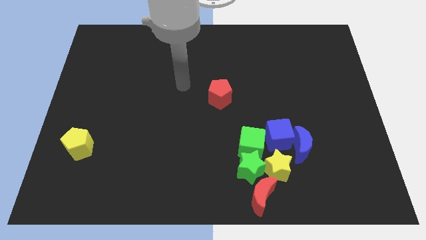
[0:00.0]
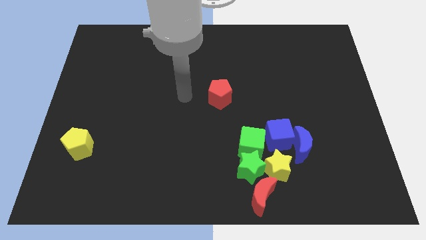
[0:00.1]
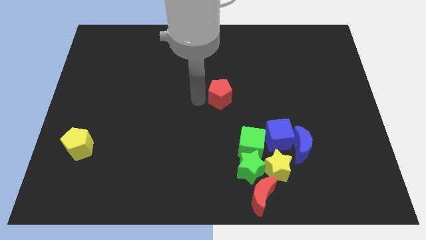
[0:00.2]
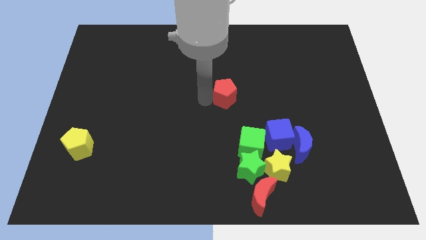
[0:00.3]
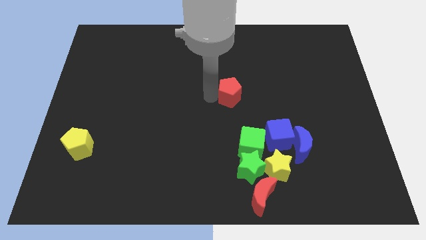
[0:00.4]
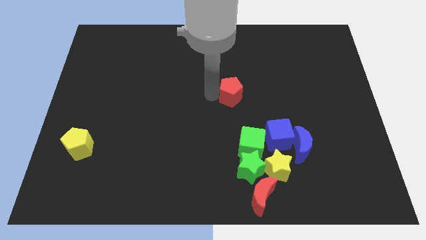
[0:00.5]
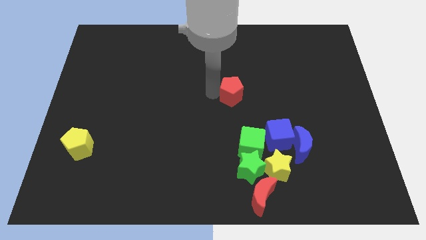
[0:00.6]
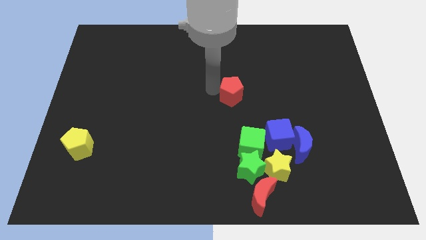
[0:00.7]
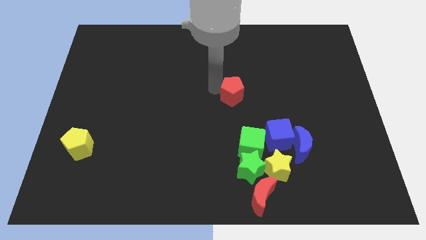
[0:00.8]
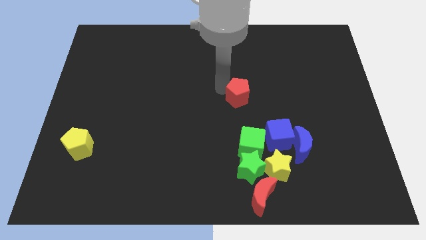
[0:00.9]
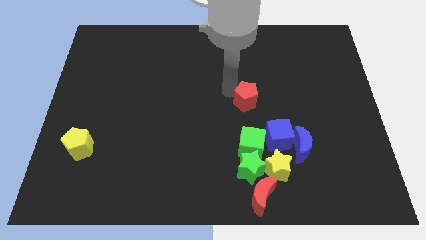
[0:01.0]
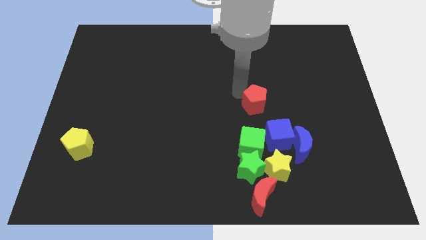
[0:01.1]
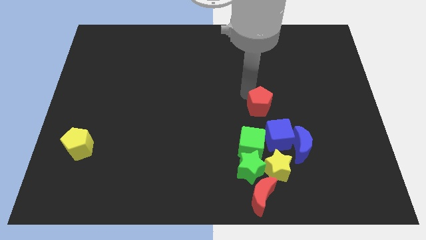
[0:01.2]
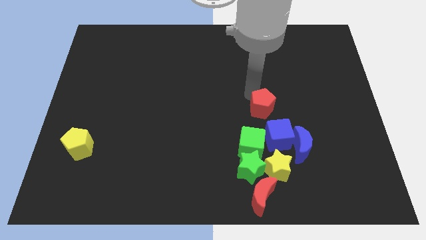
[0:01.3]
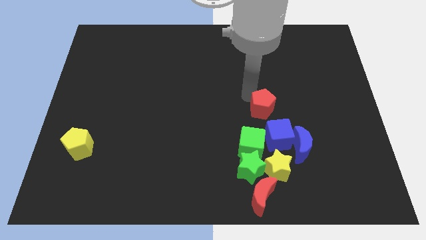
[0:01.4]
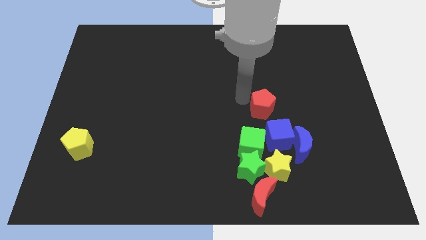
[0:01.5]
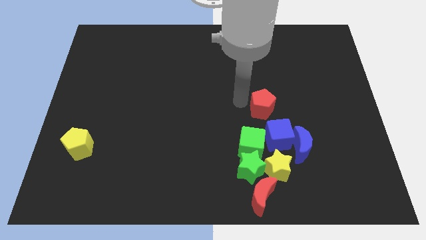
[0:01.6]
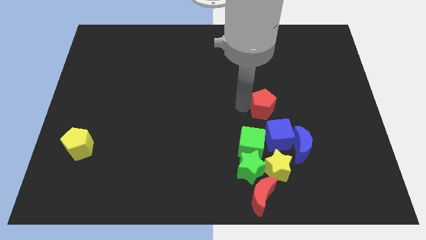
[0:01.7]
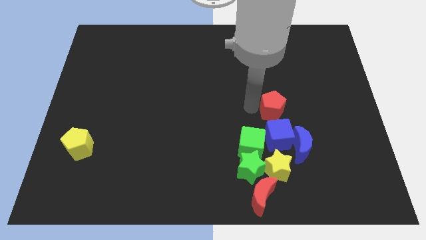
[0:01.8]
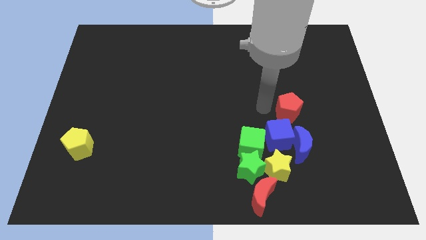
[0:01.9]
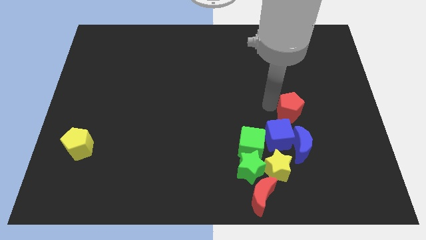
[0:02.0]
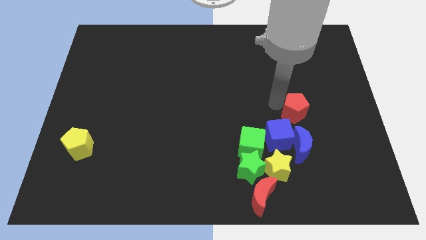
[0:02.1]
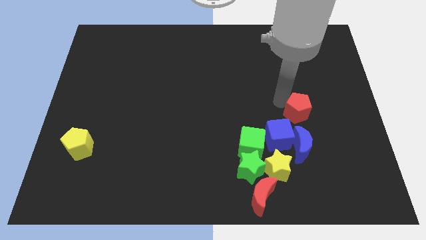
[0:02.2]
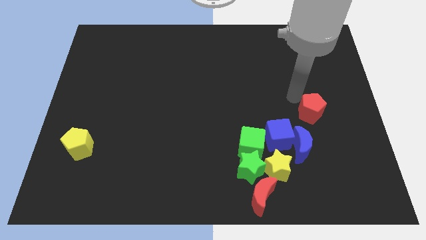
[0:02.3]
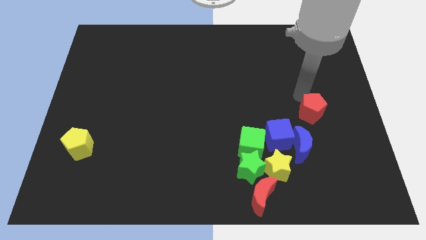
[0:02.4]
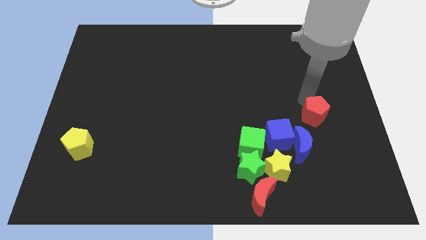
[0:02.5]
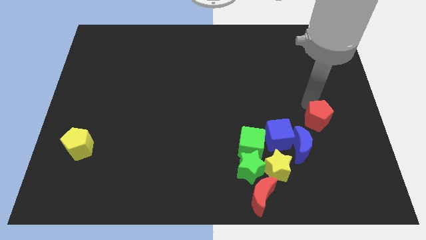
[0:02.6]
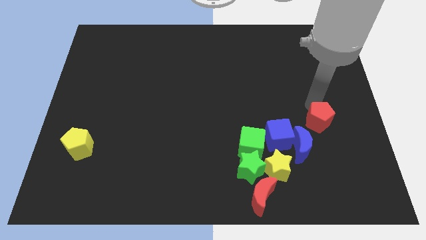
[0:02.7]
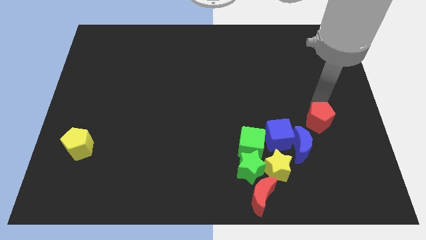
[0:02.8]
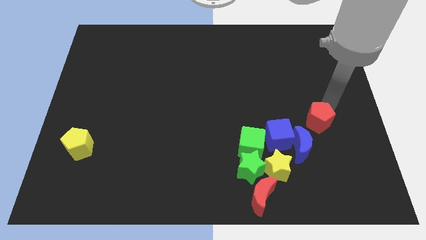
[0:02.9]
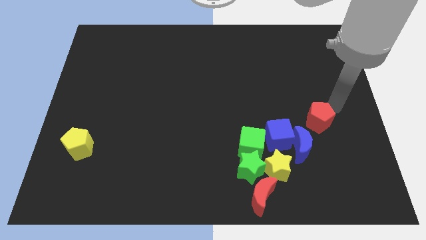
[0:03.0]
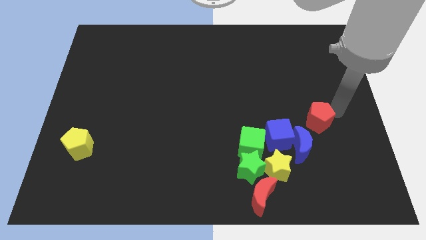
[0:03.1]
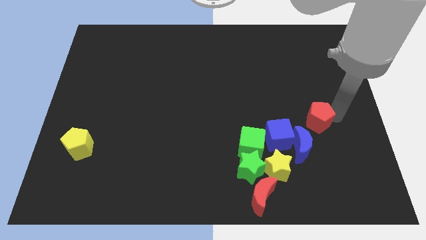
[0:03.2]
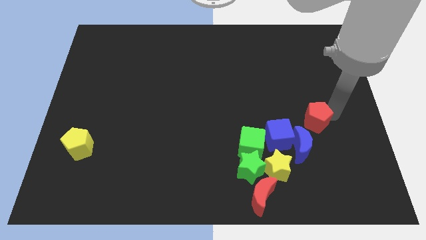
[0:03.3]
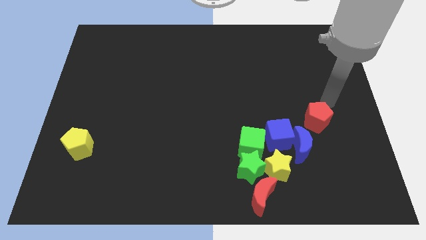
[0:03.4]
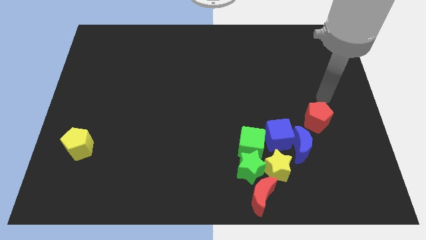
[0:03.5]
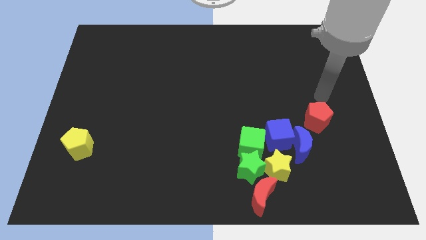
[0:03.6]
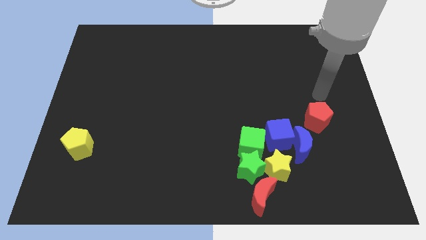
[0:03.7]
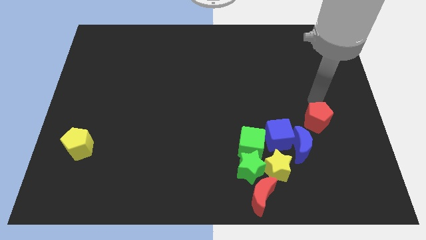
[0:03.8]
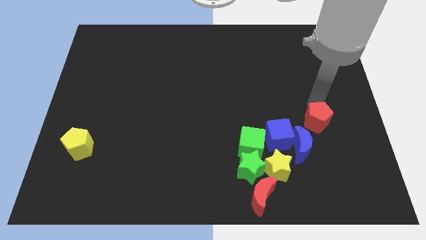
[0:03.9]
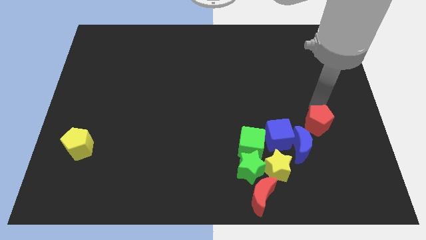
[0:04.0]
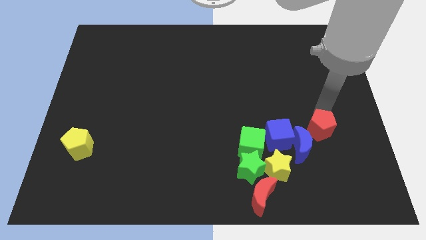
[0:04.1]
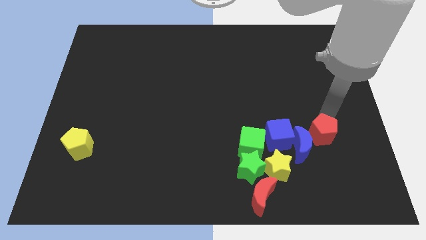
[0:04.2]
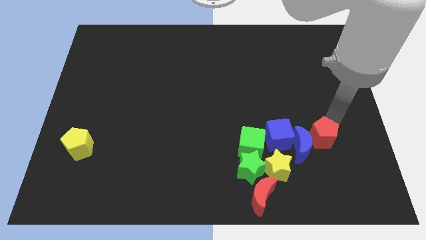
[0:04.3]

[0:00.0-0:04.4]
move red pentagon above blue moon

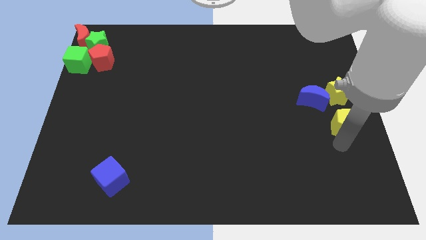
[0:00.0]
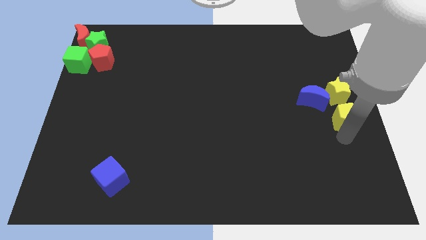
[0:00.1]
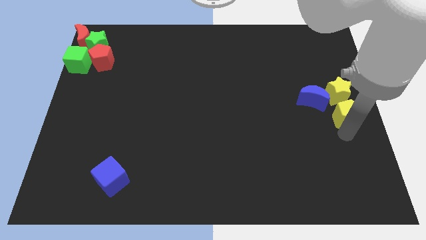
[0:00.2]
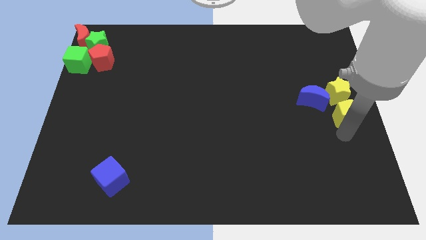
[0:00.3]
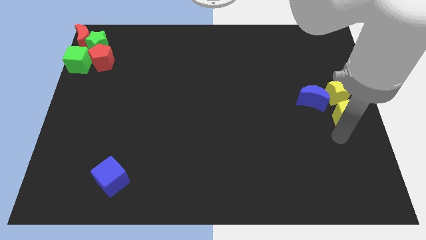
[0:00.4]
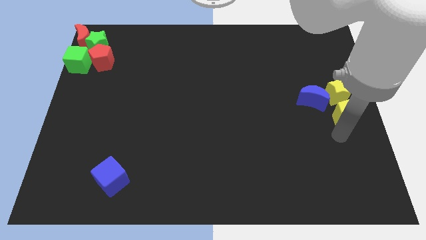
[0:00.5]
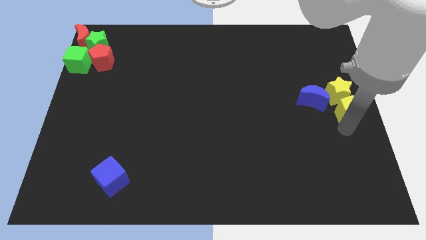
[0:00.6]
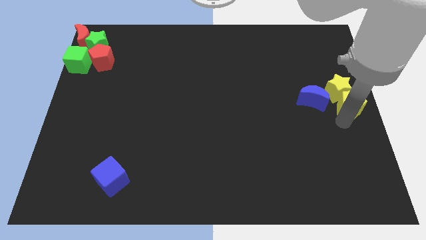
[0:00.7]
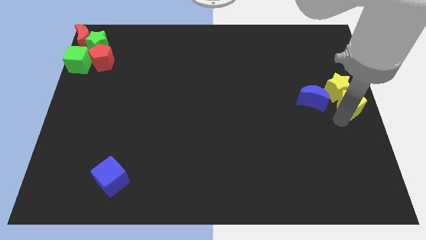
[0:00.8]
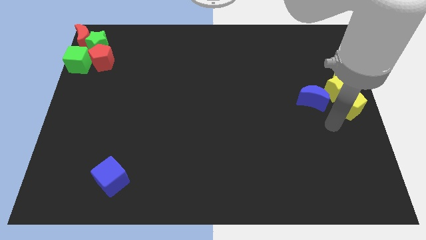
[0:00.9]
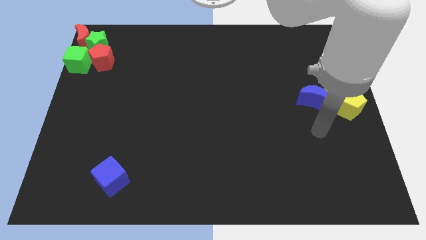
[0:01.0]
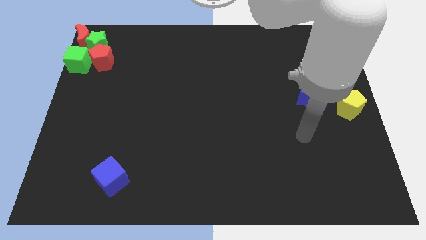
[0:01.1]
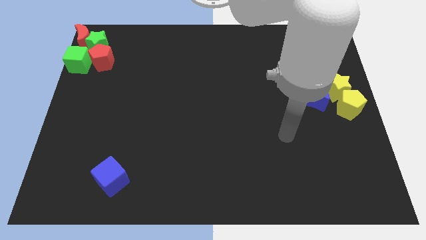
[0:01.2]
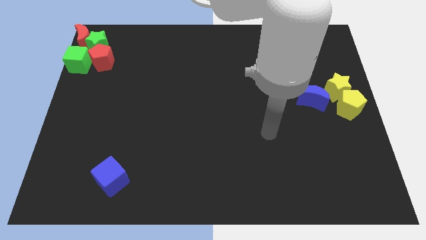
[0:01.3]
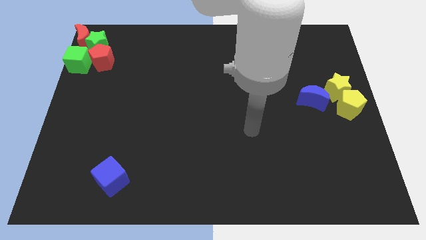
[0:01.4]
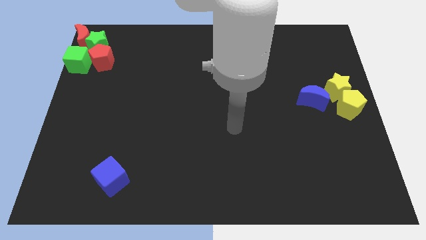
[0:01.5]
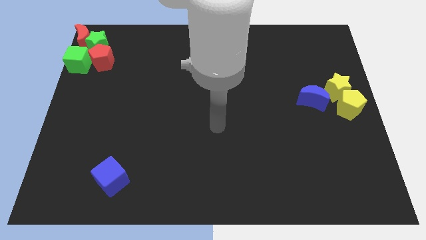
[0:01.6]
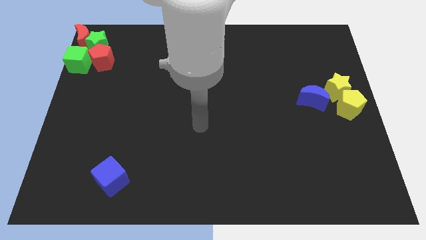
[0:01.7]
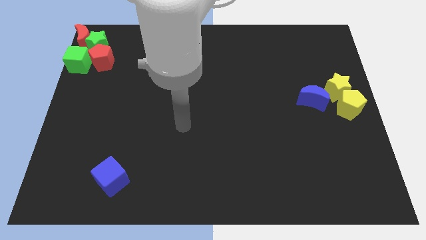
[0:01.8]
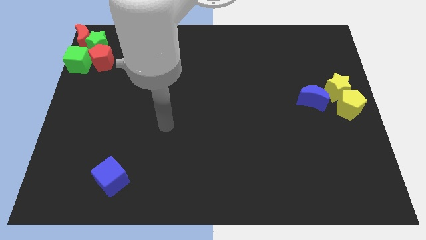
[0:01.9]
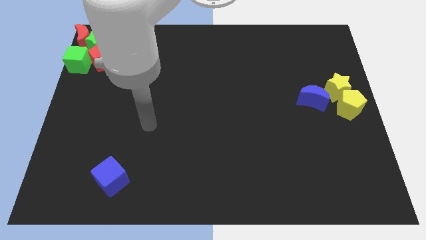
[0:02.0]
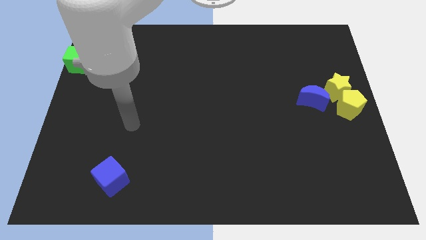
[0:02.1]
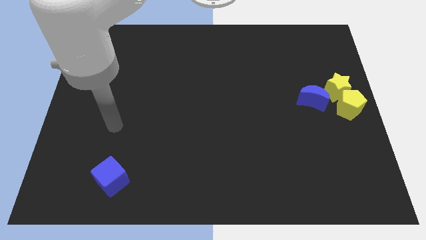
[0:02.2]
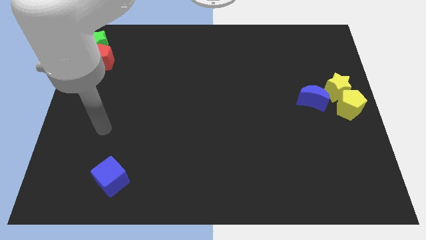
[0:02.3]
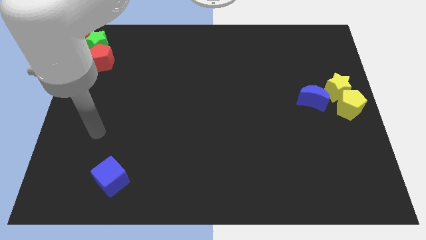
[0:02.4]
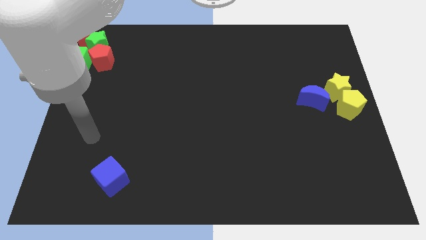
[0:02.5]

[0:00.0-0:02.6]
move your arm towards the left center side of the board

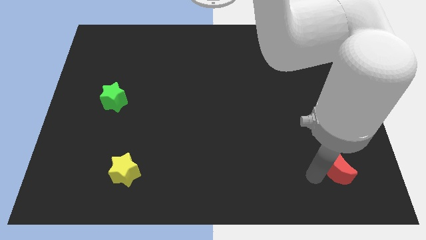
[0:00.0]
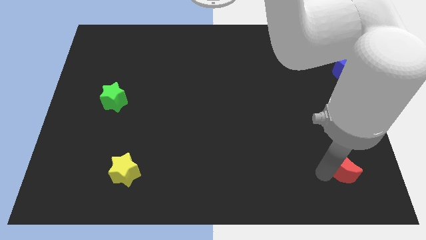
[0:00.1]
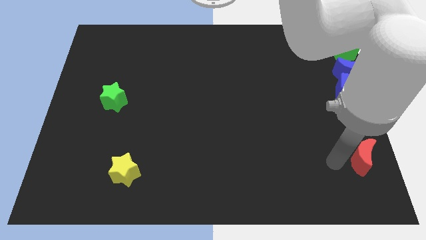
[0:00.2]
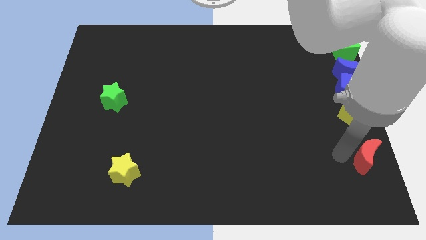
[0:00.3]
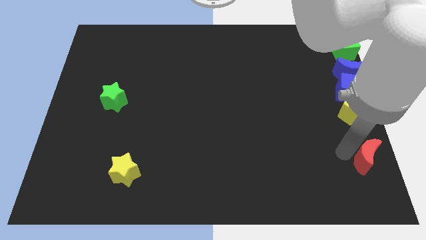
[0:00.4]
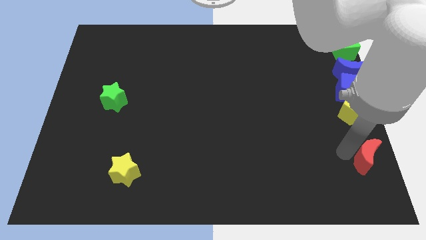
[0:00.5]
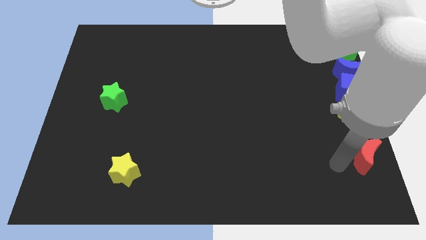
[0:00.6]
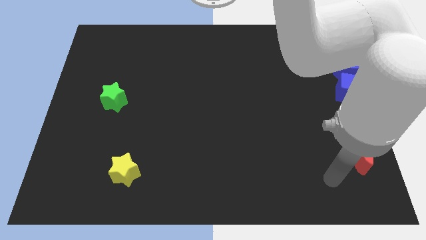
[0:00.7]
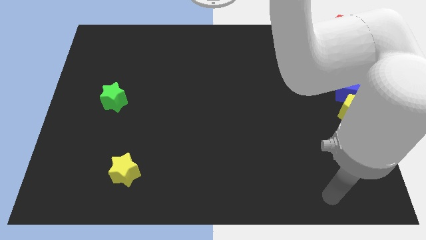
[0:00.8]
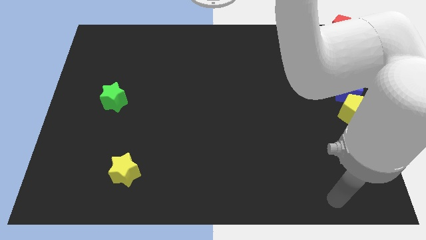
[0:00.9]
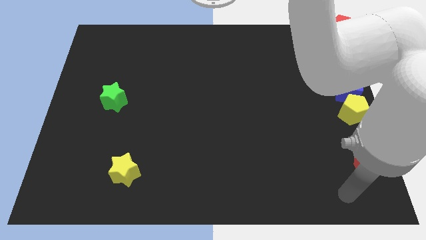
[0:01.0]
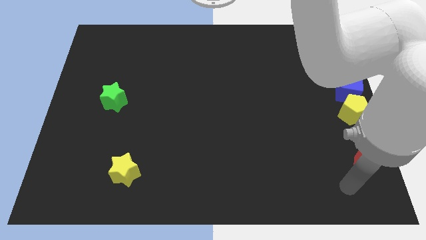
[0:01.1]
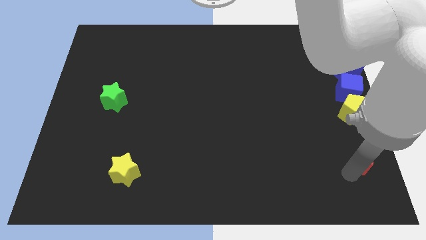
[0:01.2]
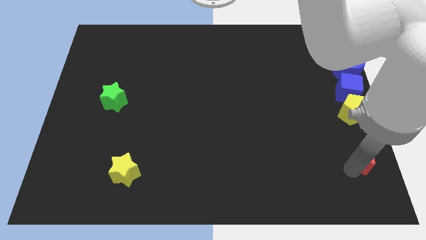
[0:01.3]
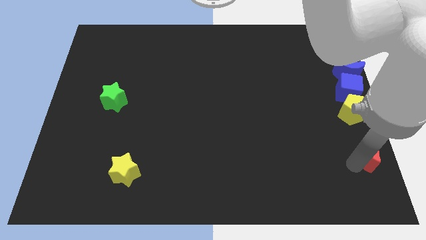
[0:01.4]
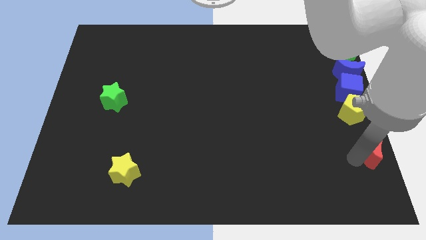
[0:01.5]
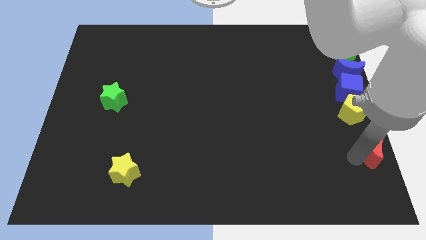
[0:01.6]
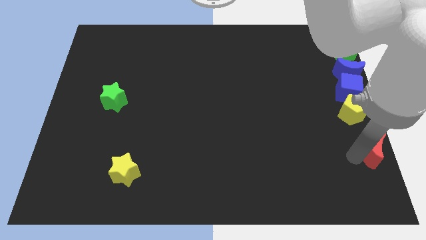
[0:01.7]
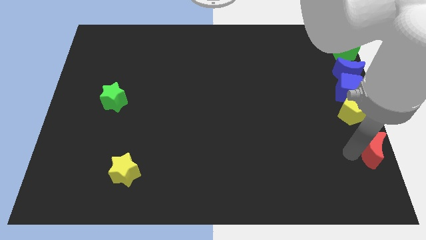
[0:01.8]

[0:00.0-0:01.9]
move the red moon to the bottom right side of the yellow pentagon
